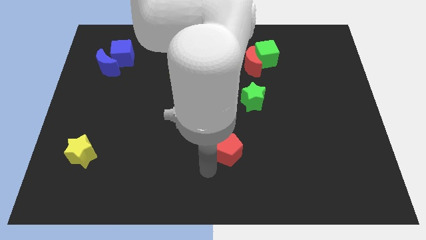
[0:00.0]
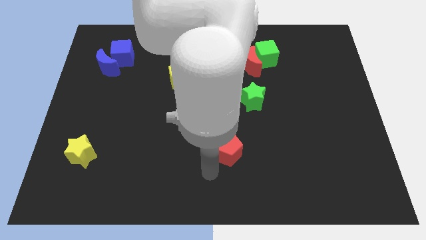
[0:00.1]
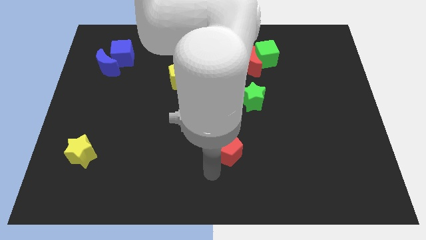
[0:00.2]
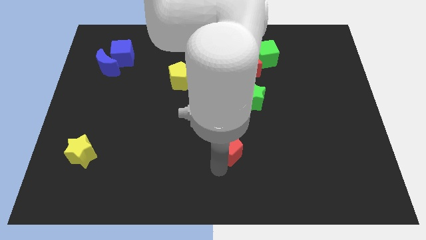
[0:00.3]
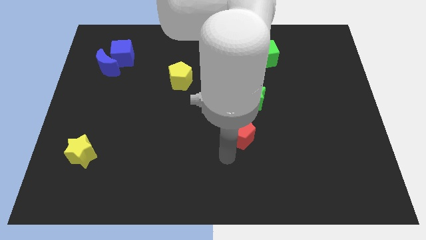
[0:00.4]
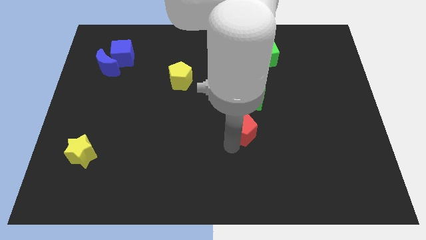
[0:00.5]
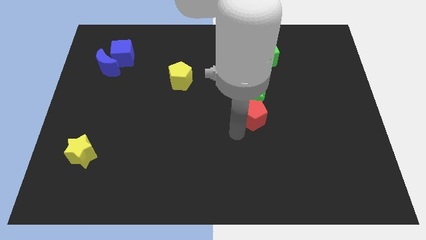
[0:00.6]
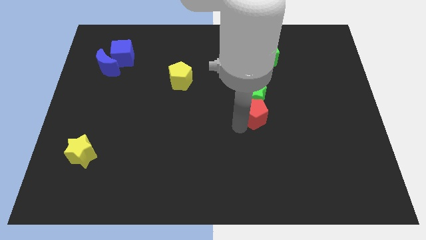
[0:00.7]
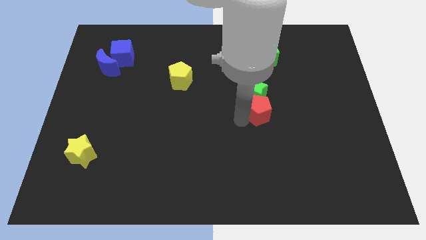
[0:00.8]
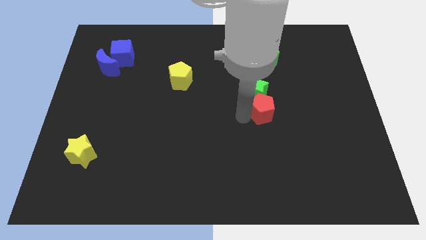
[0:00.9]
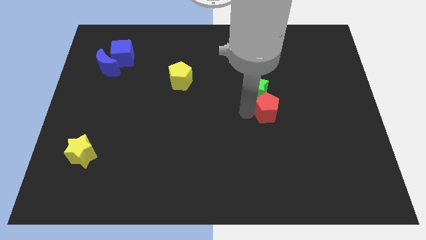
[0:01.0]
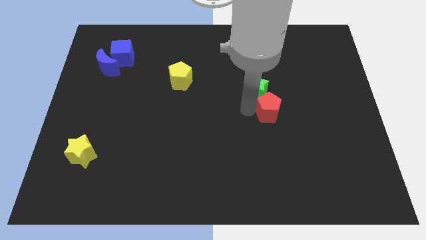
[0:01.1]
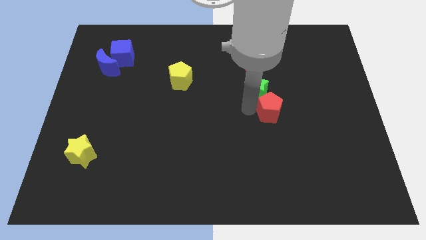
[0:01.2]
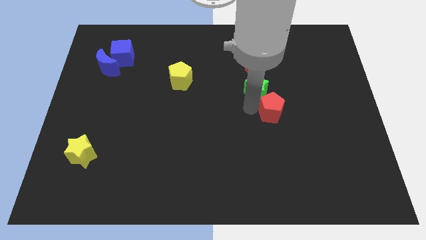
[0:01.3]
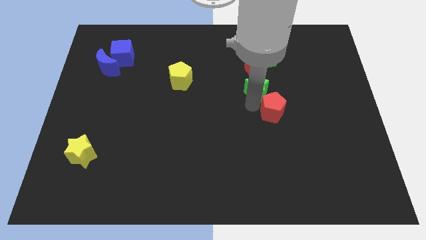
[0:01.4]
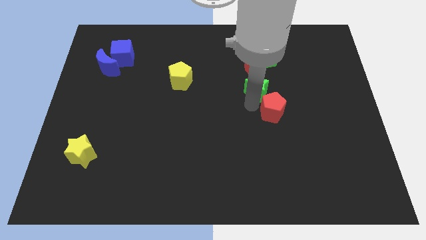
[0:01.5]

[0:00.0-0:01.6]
move the red pentagon towards the green star

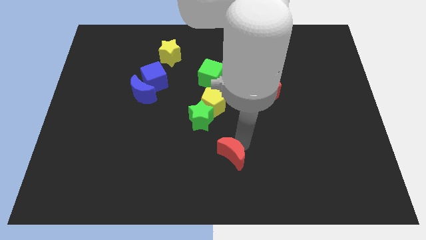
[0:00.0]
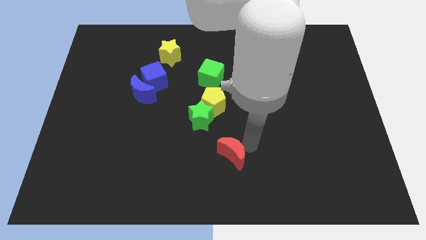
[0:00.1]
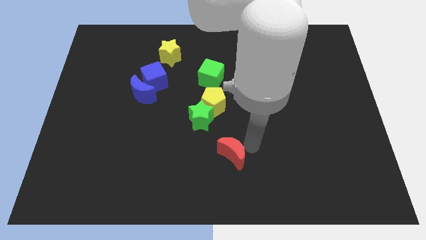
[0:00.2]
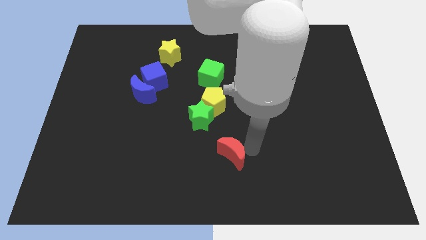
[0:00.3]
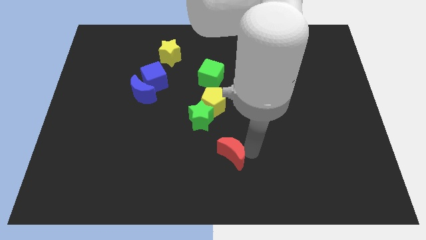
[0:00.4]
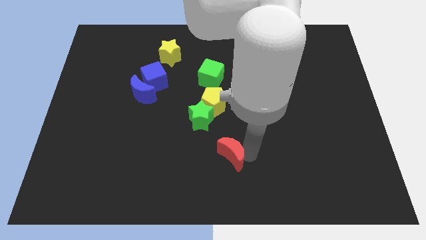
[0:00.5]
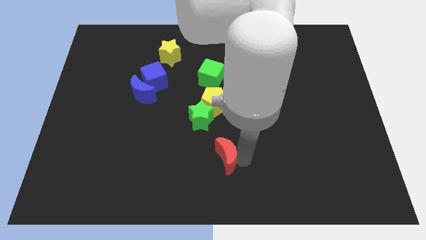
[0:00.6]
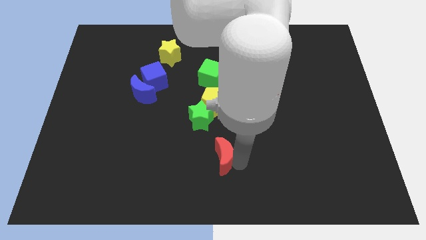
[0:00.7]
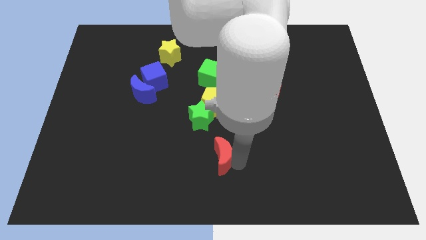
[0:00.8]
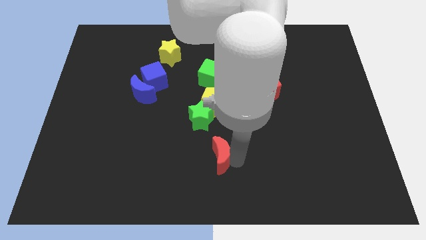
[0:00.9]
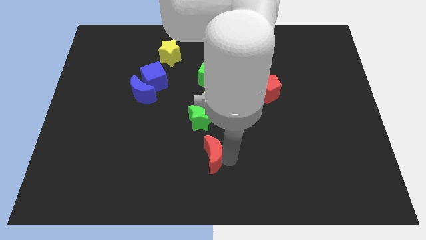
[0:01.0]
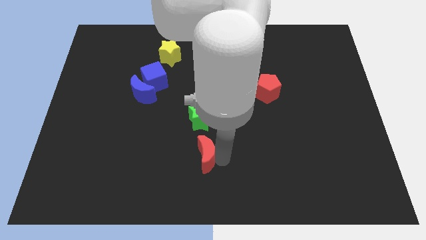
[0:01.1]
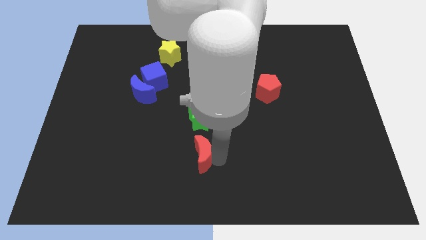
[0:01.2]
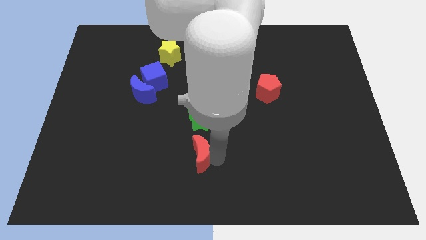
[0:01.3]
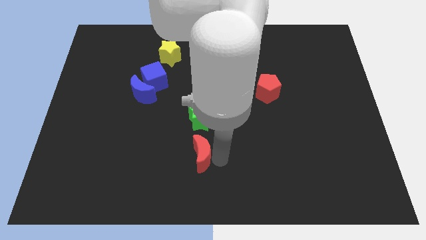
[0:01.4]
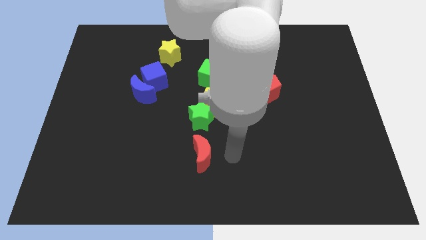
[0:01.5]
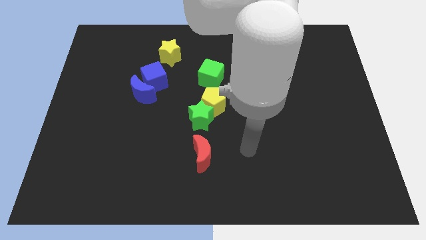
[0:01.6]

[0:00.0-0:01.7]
place the red crescent to the bottom of the green star

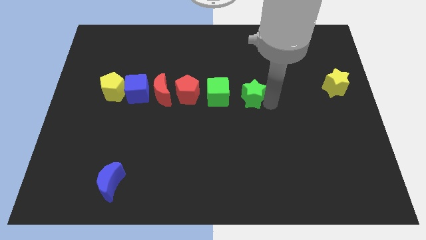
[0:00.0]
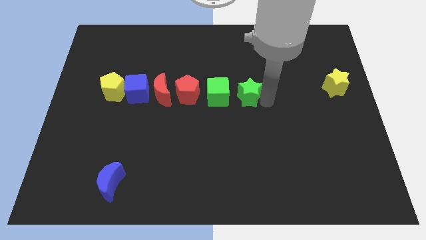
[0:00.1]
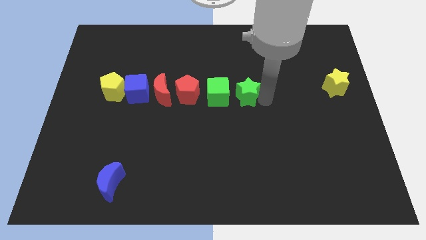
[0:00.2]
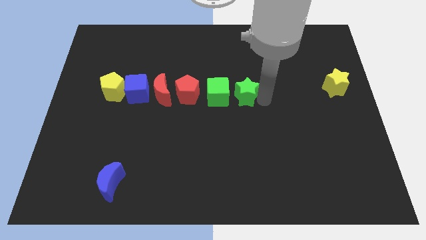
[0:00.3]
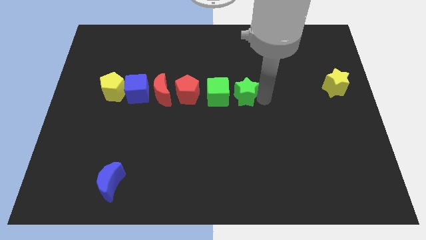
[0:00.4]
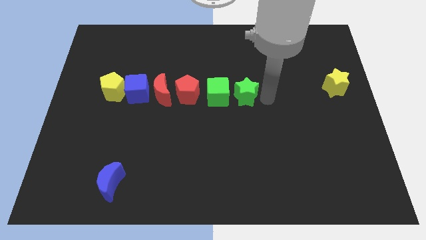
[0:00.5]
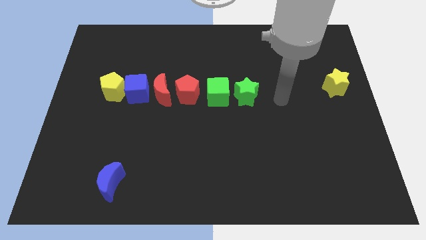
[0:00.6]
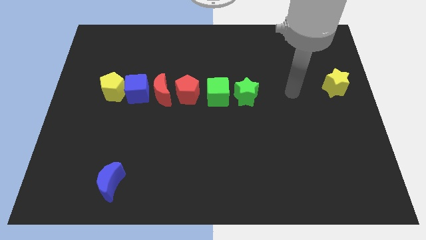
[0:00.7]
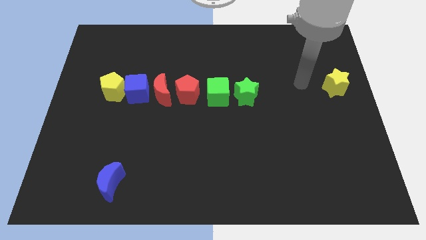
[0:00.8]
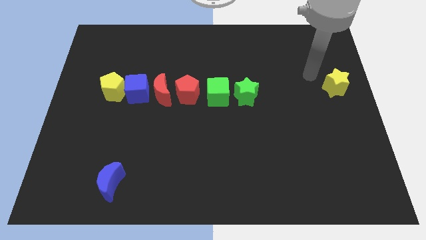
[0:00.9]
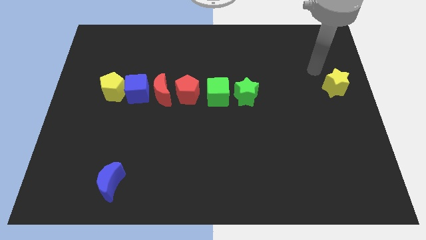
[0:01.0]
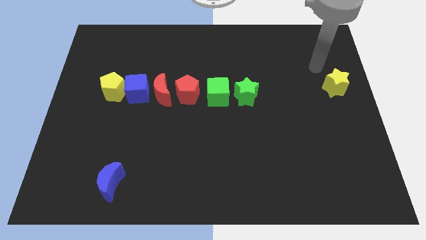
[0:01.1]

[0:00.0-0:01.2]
move the green star to the right of the green cube

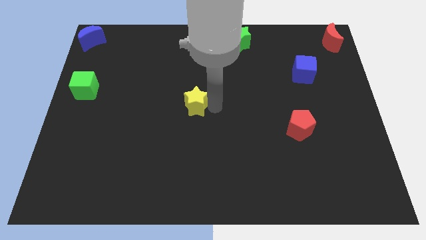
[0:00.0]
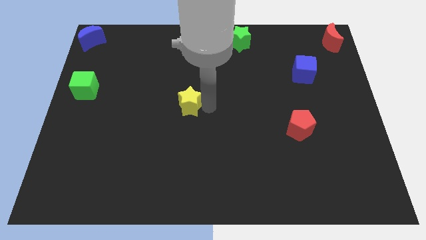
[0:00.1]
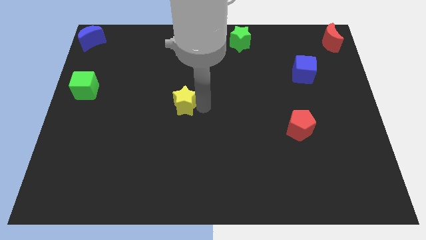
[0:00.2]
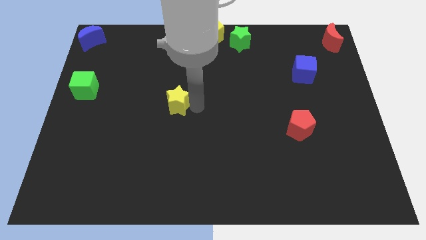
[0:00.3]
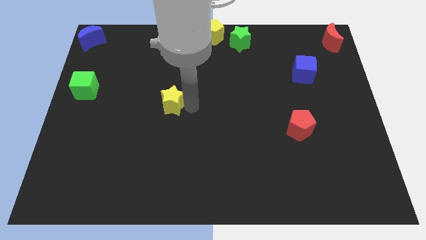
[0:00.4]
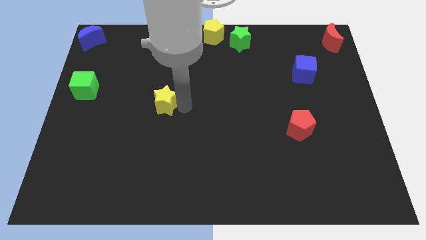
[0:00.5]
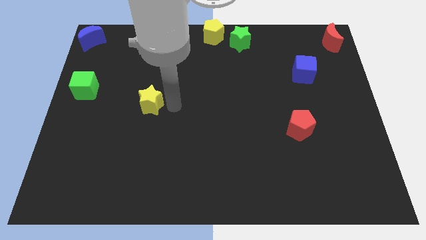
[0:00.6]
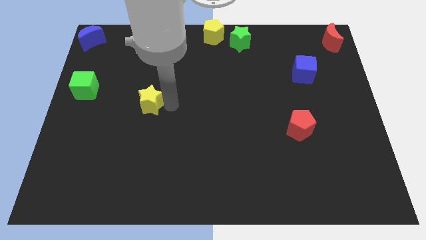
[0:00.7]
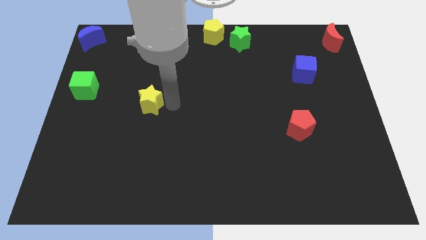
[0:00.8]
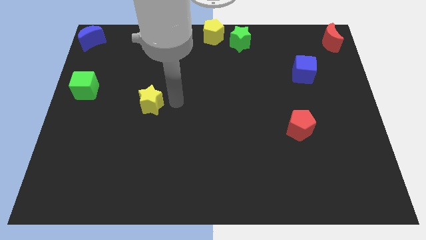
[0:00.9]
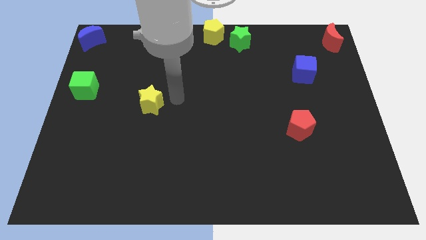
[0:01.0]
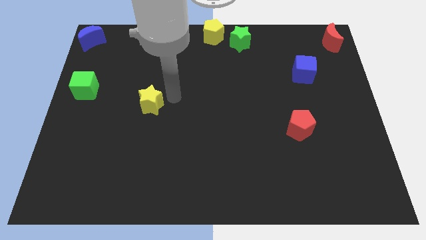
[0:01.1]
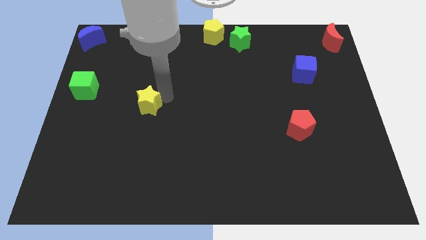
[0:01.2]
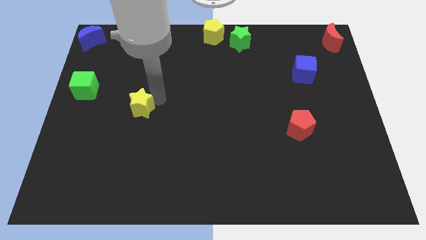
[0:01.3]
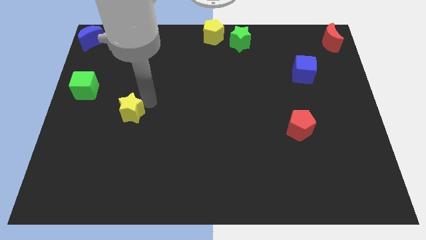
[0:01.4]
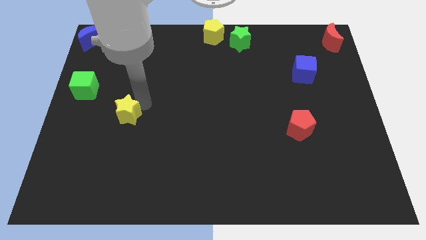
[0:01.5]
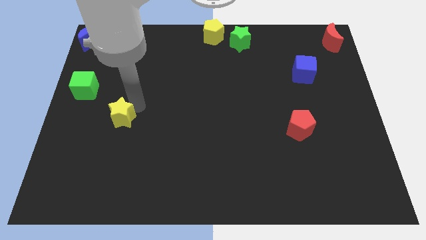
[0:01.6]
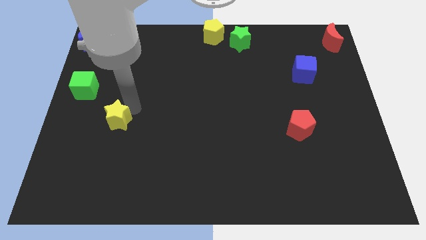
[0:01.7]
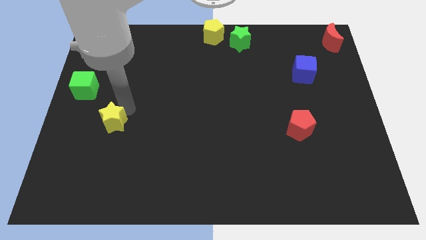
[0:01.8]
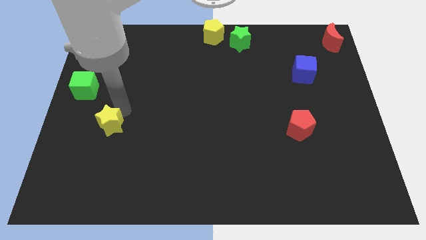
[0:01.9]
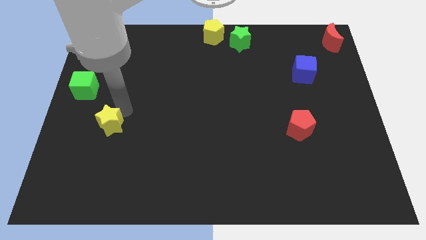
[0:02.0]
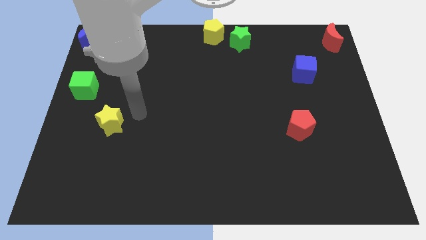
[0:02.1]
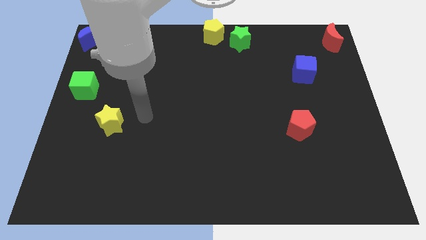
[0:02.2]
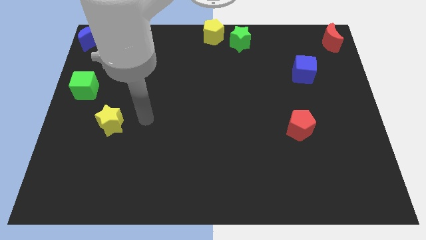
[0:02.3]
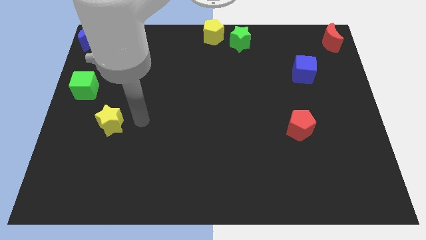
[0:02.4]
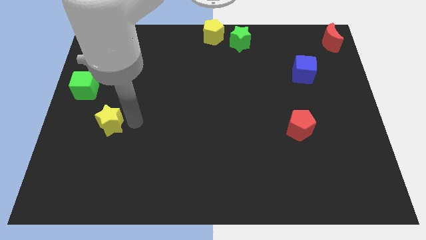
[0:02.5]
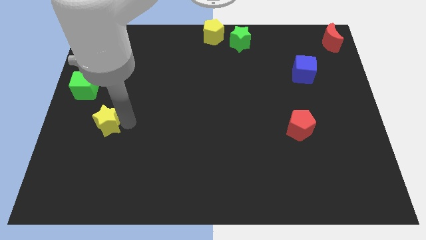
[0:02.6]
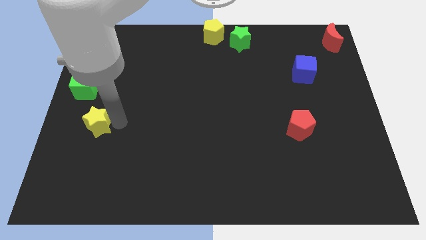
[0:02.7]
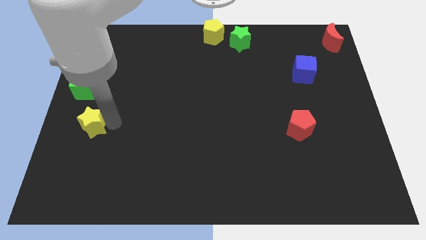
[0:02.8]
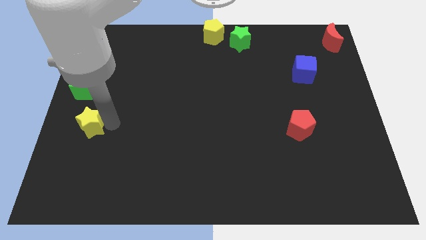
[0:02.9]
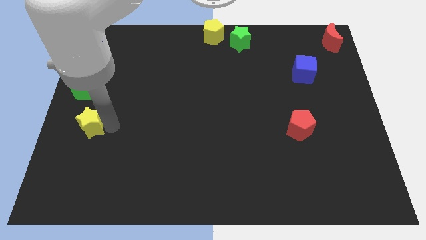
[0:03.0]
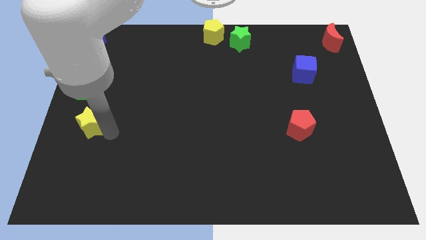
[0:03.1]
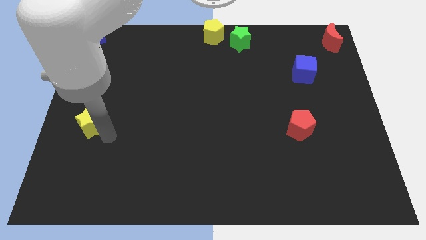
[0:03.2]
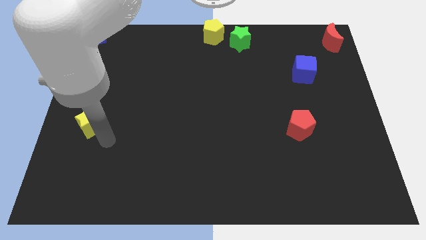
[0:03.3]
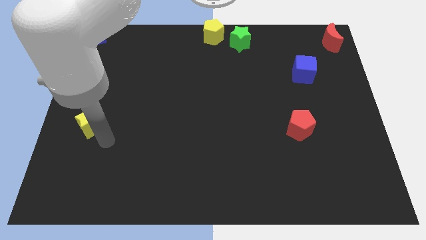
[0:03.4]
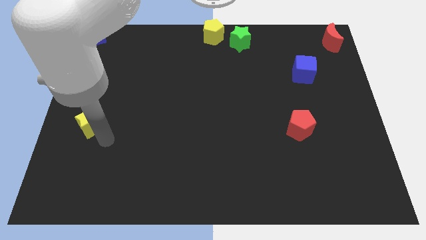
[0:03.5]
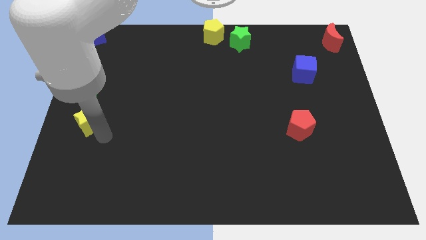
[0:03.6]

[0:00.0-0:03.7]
push the yellow star downward

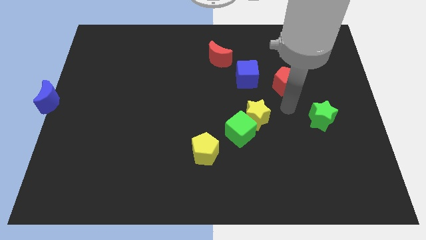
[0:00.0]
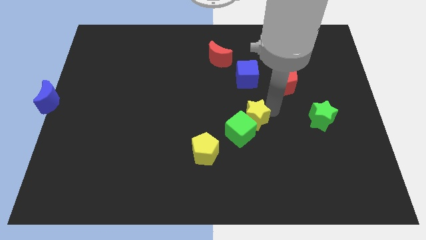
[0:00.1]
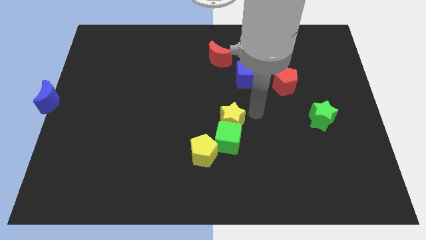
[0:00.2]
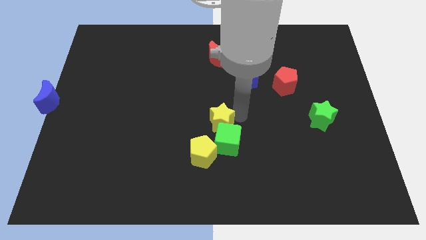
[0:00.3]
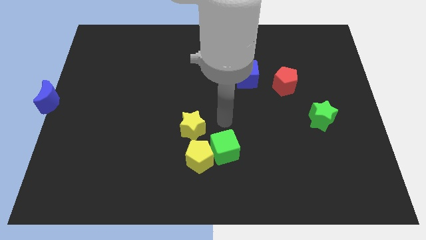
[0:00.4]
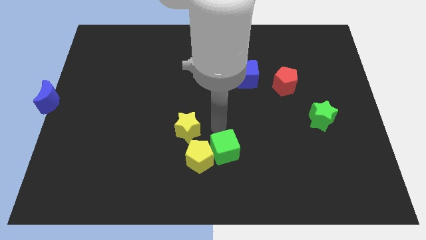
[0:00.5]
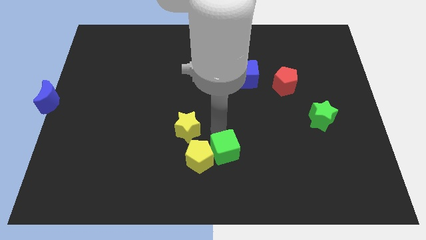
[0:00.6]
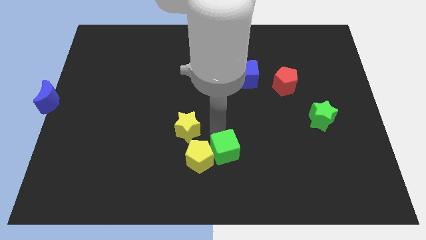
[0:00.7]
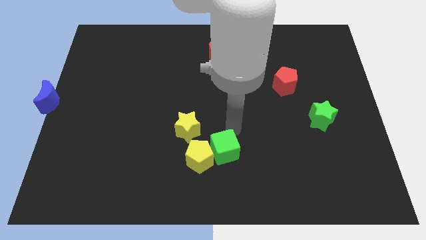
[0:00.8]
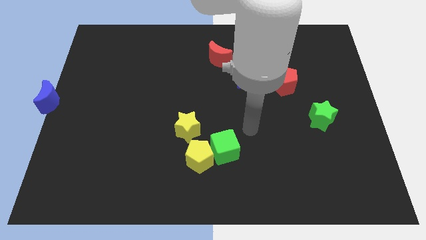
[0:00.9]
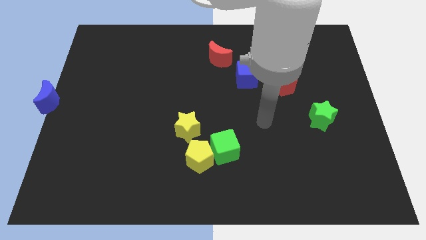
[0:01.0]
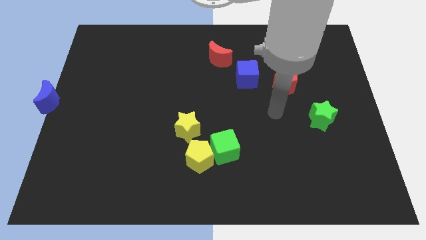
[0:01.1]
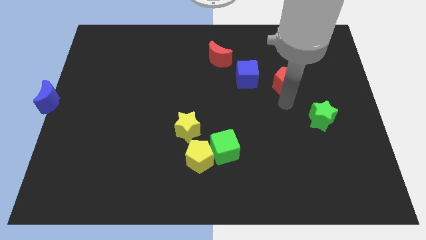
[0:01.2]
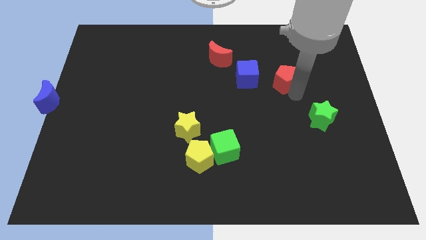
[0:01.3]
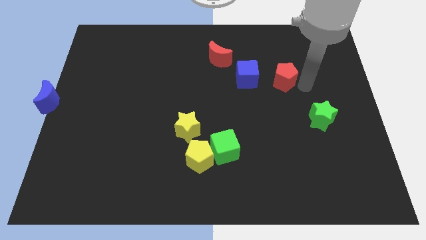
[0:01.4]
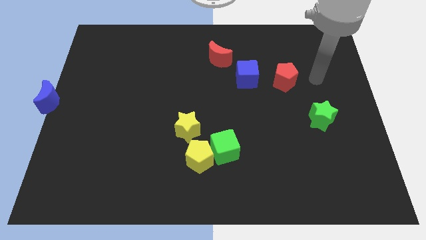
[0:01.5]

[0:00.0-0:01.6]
move red pentagon slightly up
